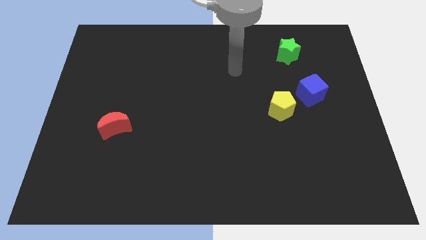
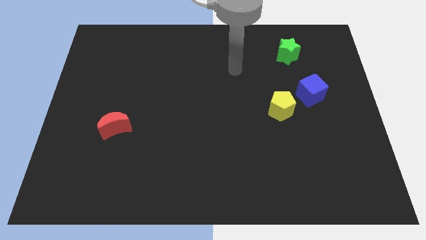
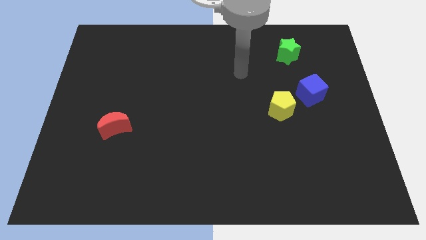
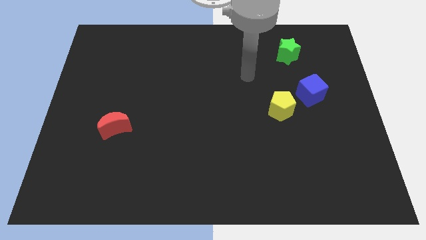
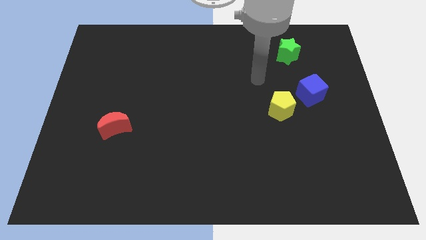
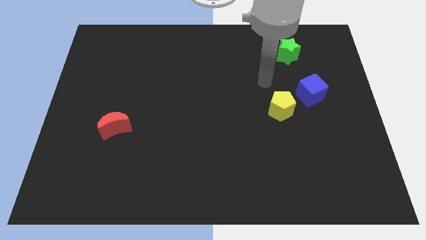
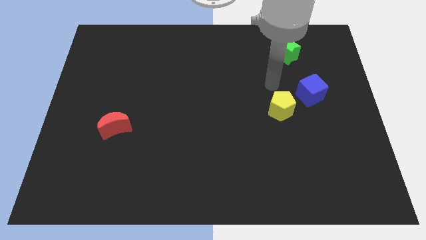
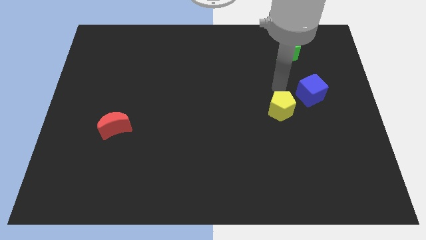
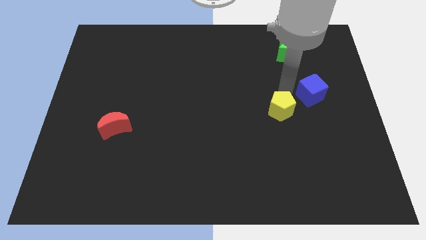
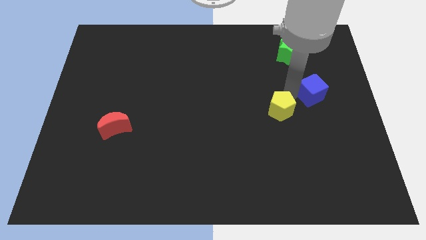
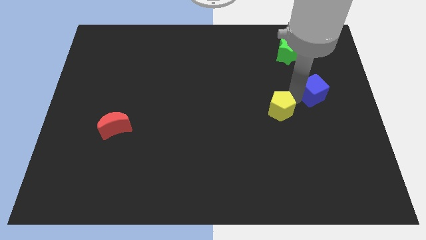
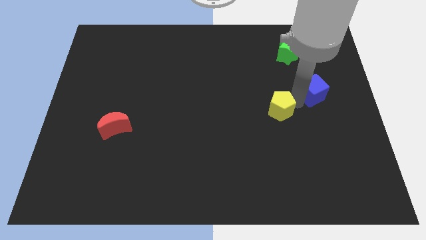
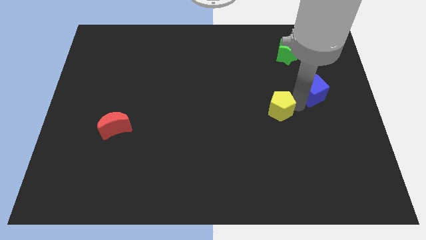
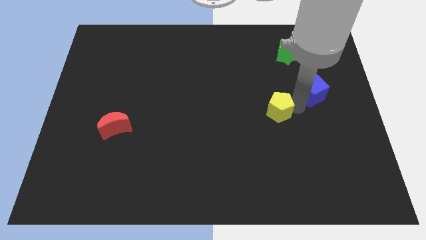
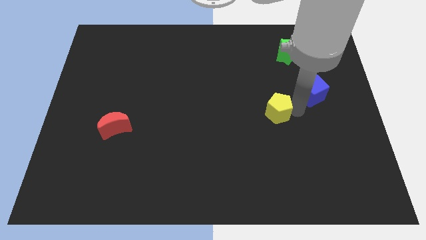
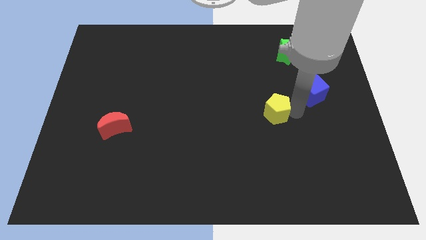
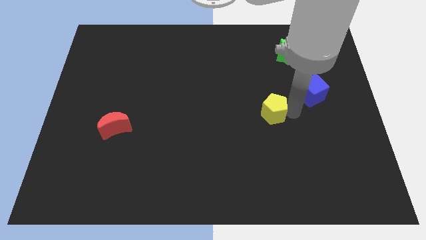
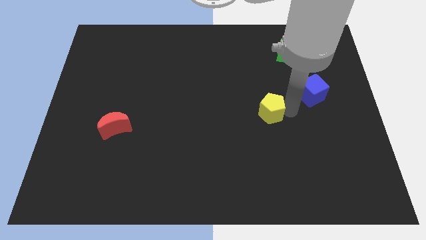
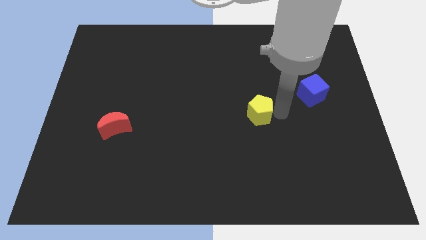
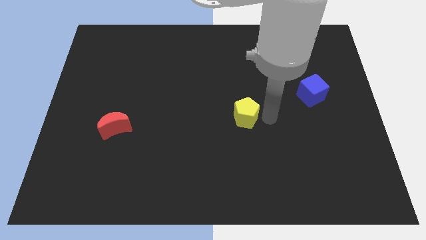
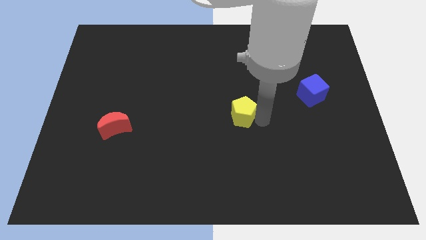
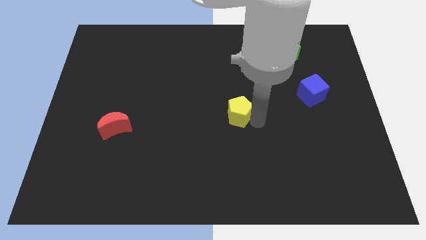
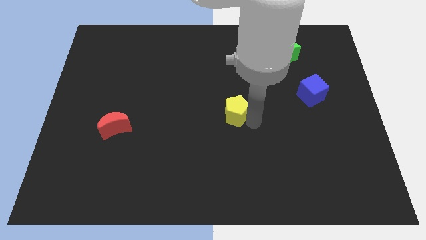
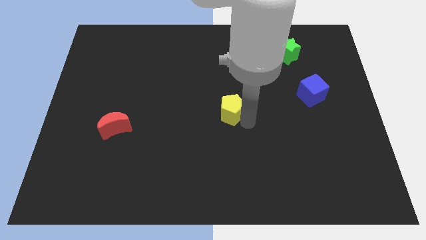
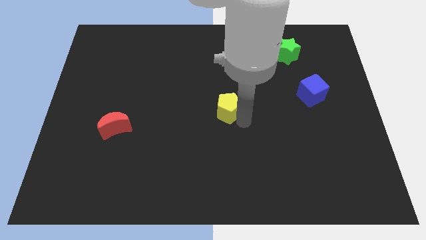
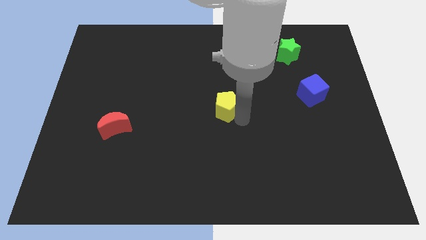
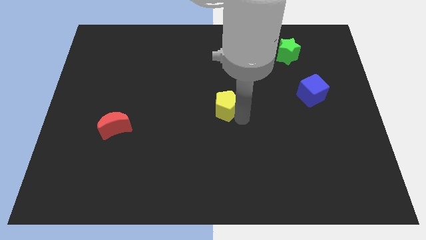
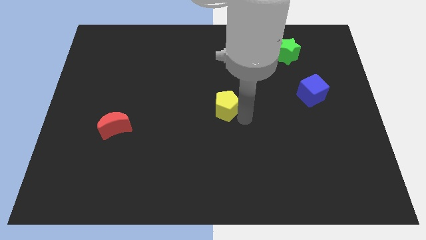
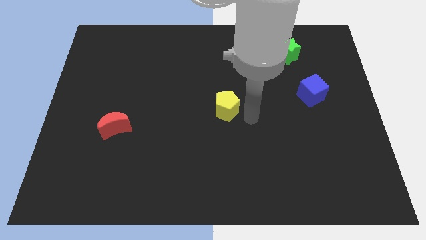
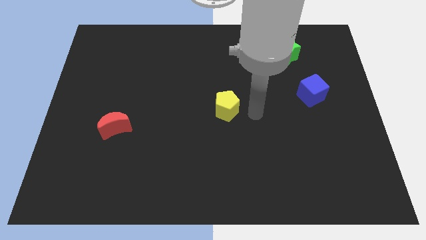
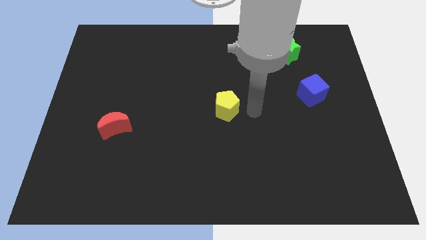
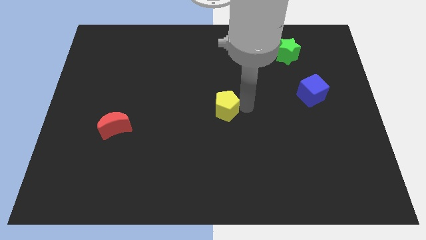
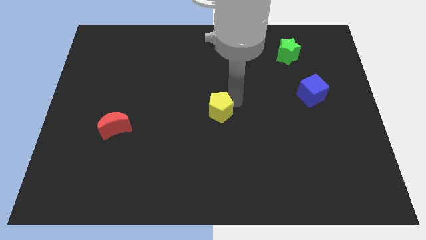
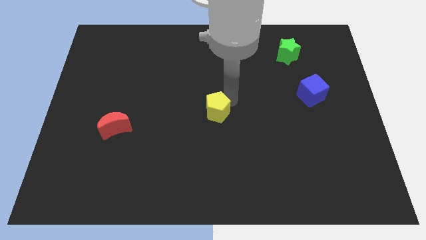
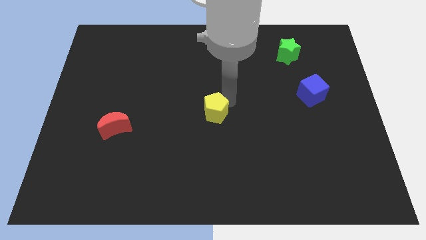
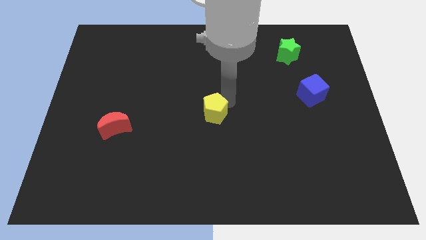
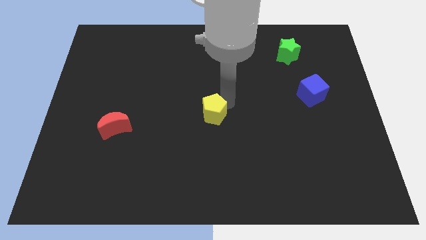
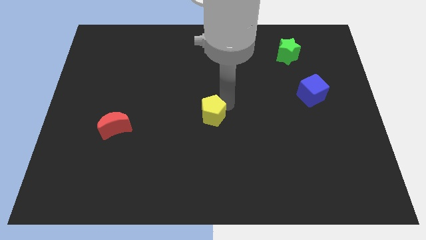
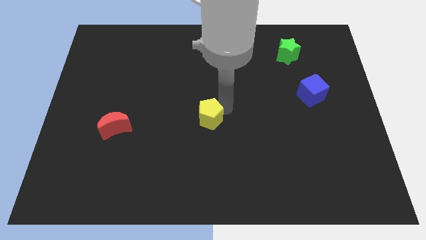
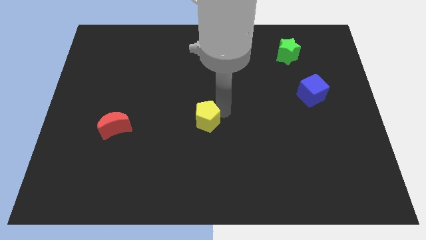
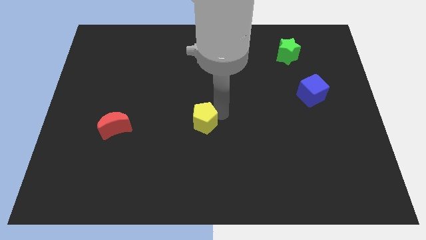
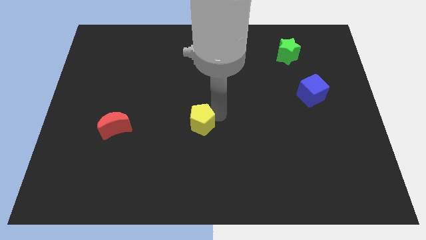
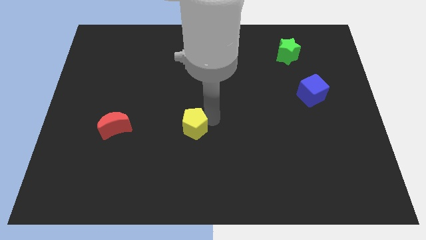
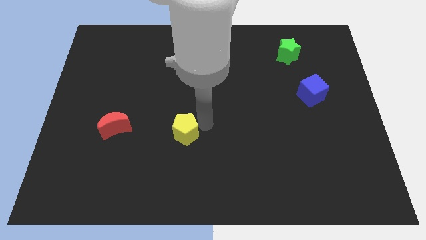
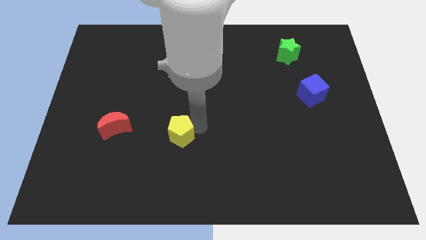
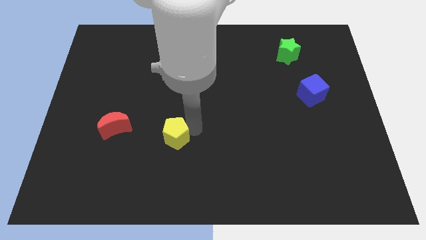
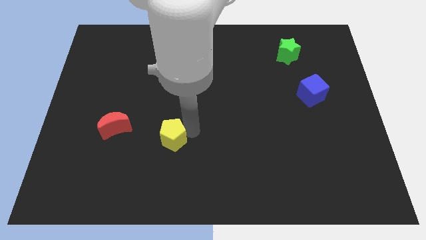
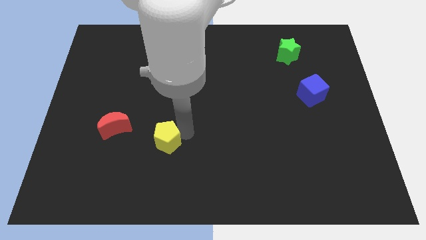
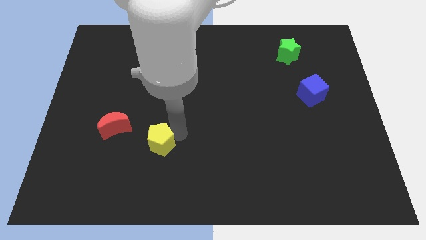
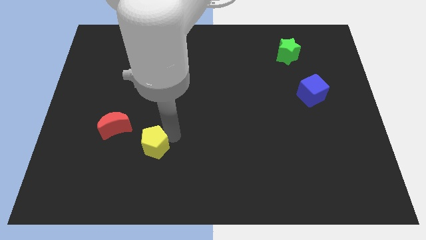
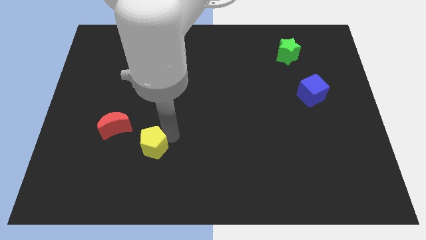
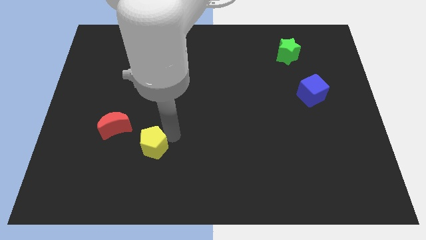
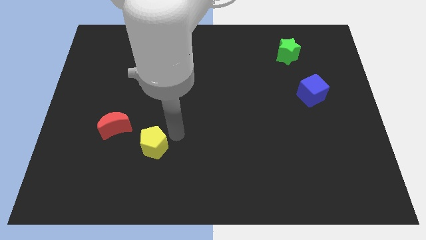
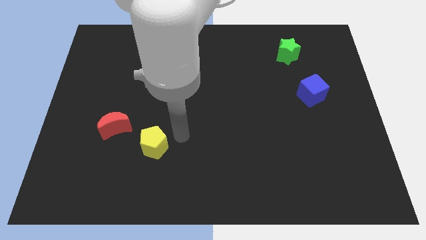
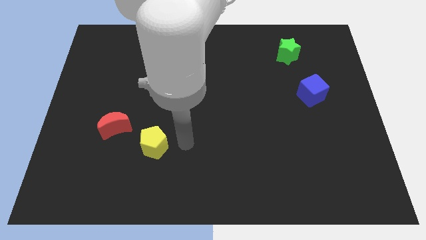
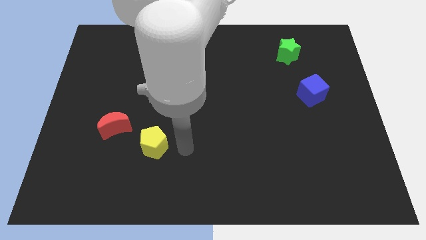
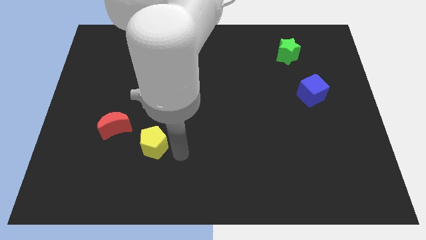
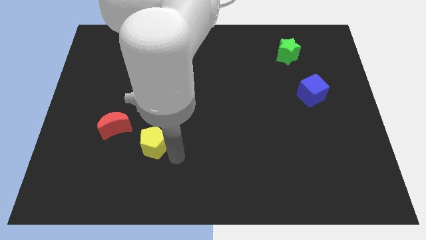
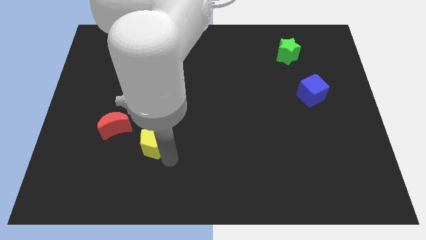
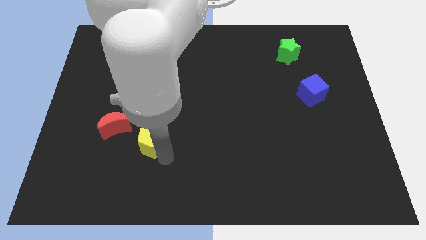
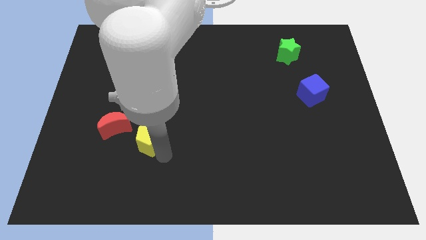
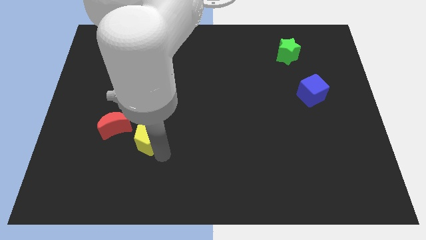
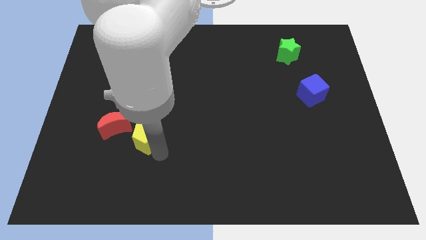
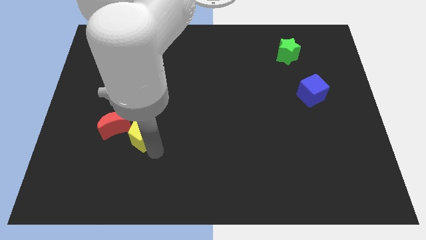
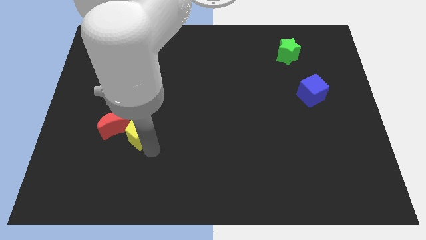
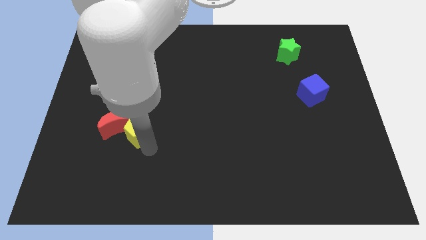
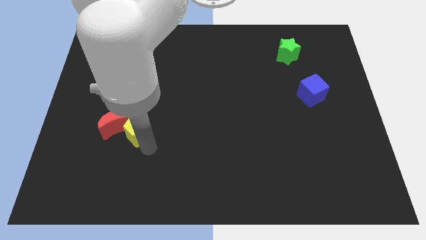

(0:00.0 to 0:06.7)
slide the yellow block next to the red moon

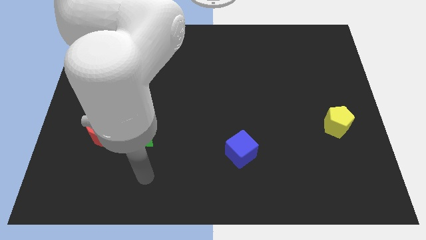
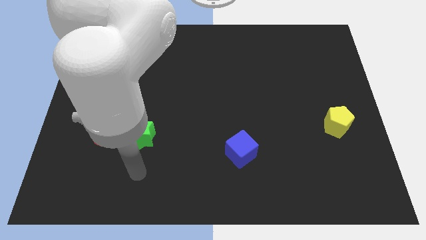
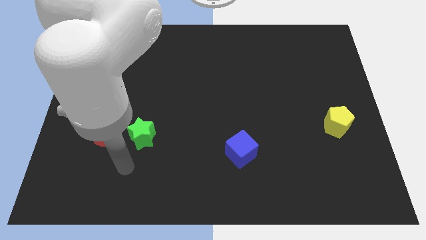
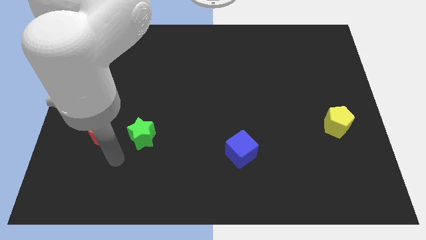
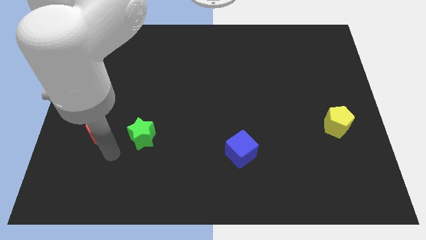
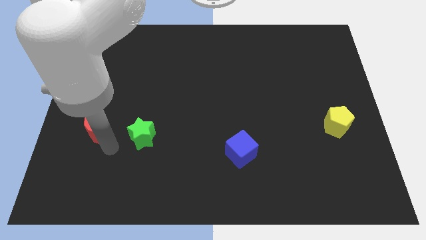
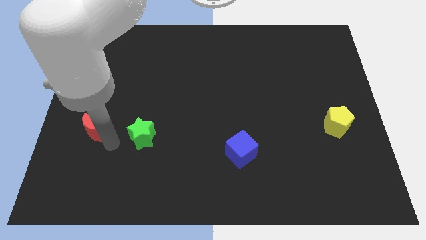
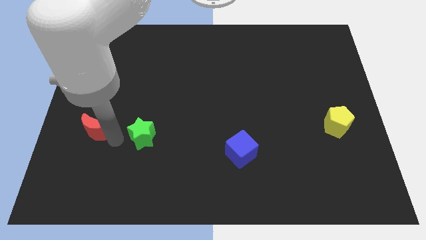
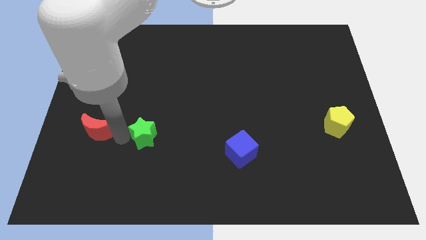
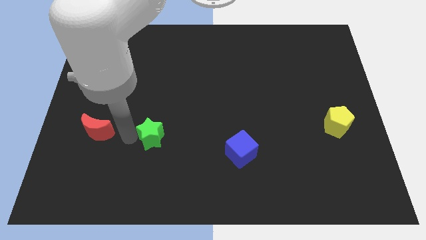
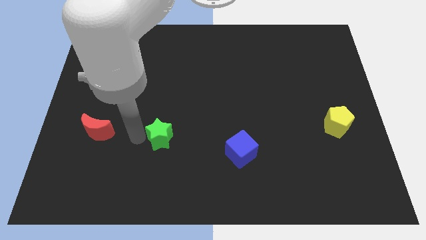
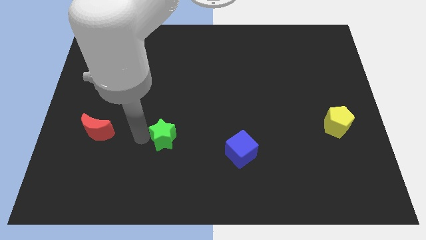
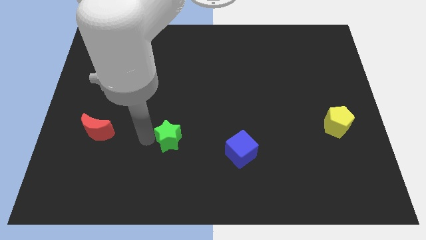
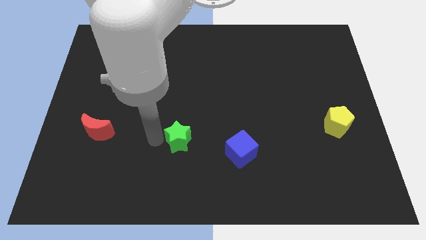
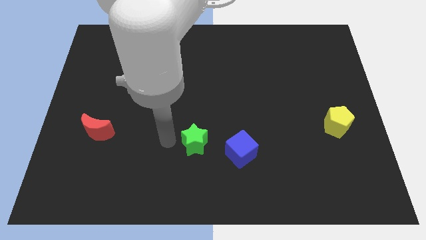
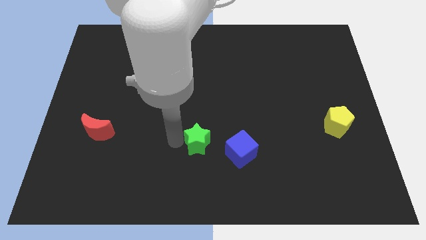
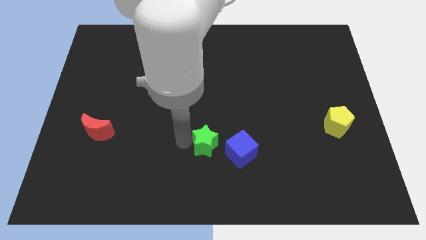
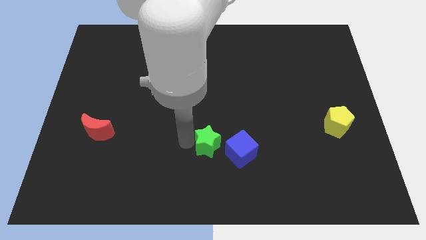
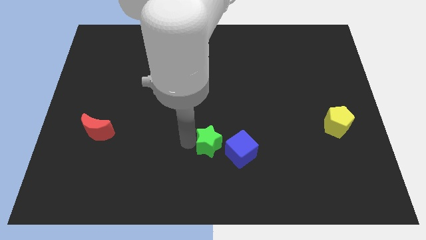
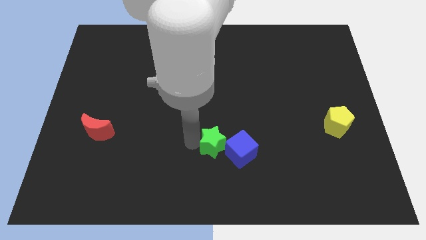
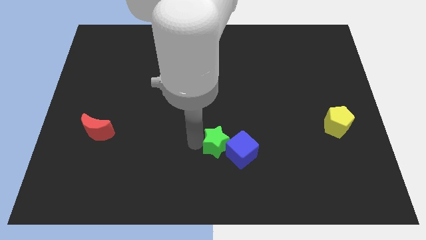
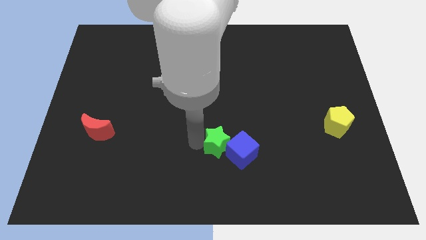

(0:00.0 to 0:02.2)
slide the green block next to the blue cube
